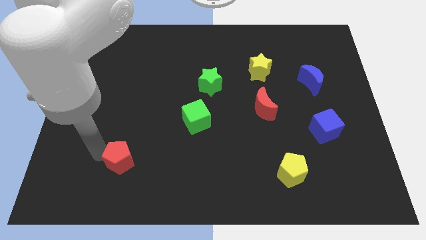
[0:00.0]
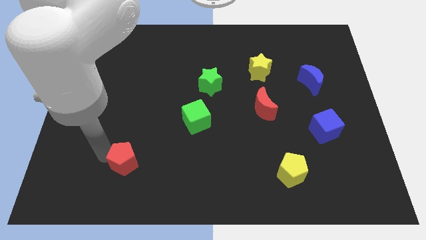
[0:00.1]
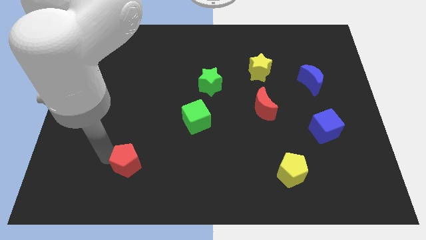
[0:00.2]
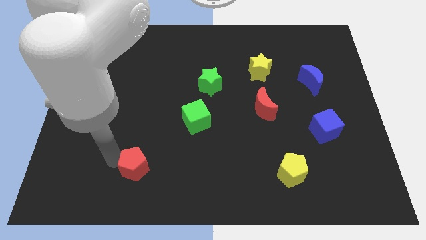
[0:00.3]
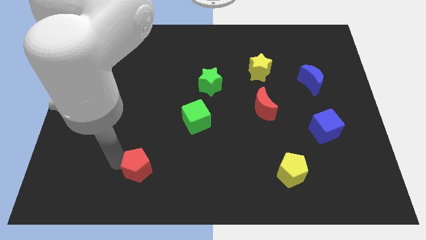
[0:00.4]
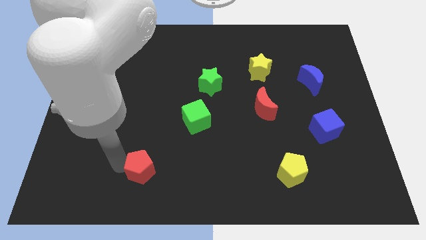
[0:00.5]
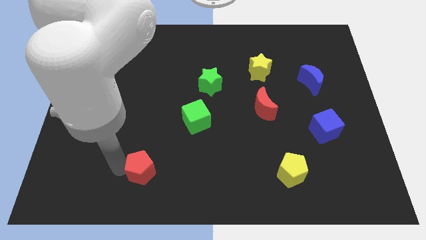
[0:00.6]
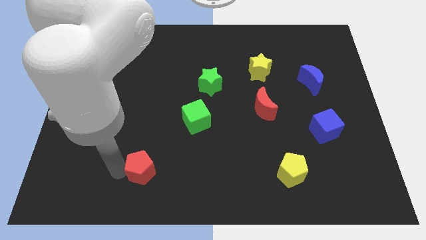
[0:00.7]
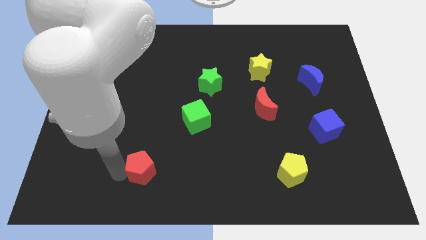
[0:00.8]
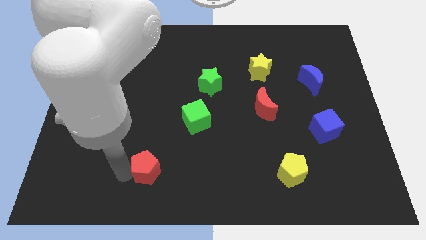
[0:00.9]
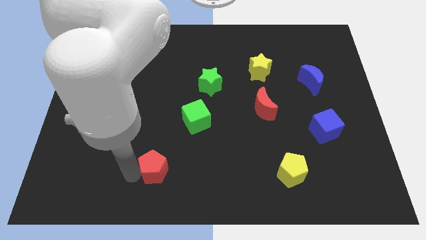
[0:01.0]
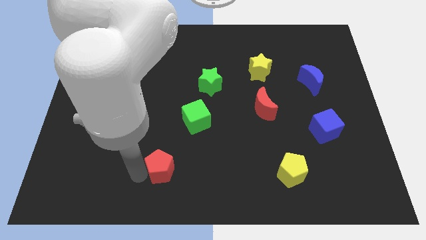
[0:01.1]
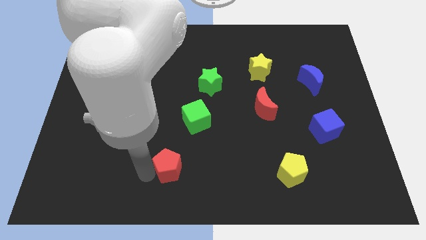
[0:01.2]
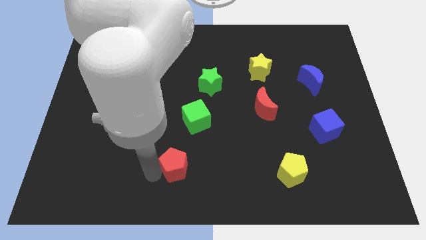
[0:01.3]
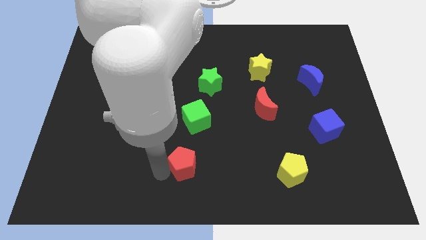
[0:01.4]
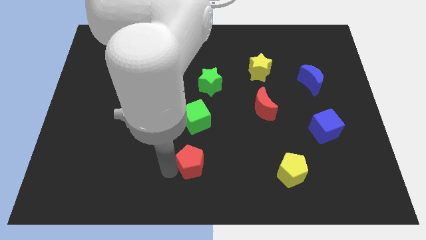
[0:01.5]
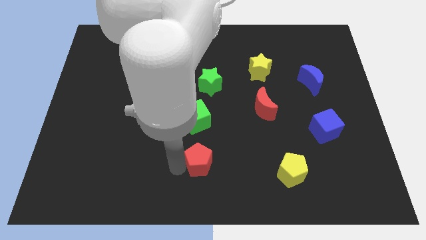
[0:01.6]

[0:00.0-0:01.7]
push the red pentagon below the green cube

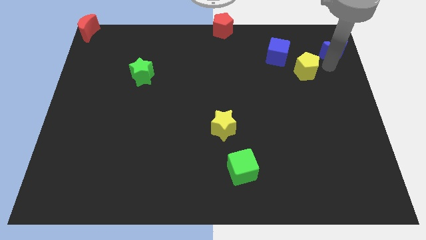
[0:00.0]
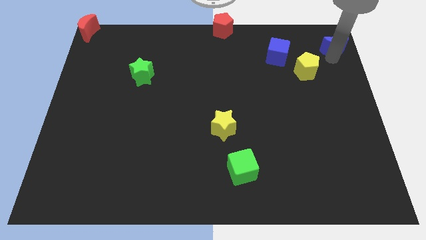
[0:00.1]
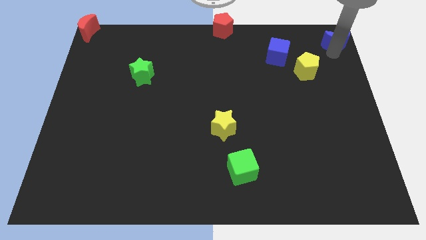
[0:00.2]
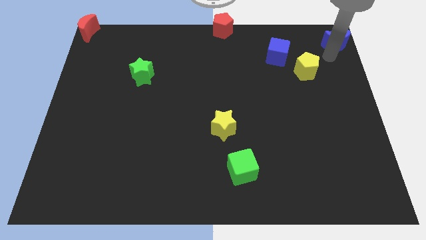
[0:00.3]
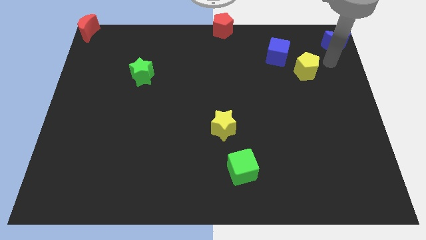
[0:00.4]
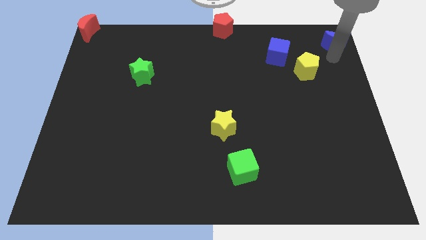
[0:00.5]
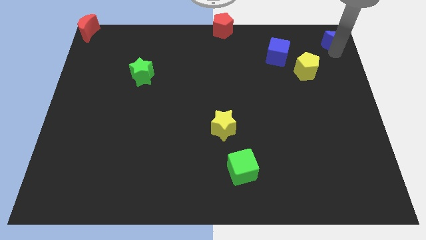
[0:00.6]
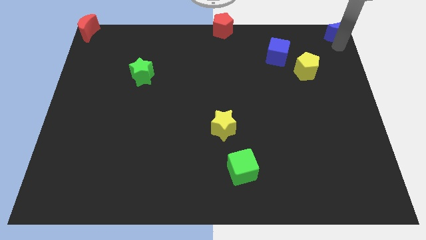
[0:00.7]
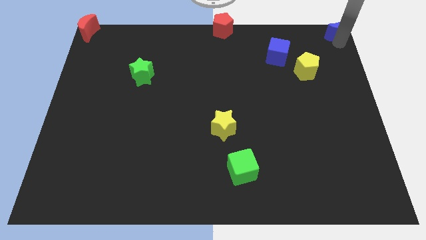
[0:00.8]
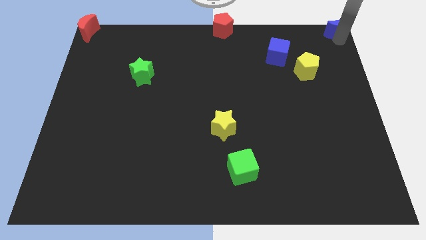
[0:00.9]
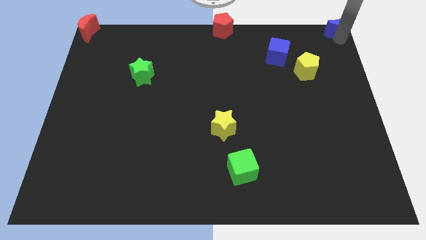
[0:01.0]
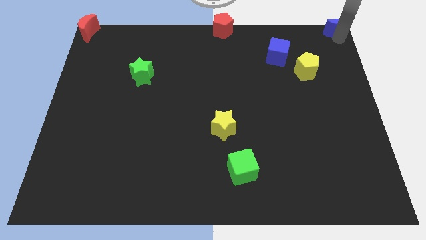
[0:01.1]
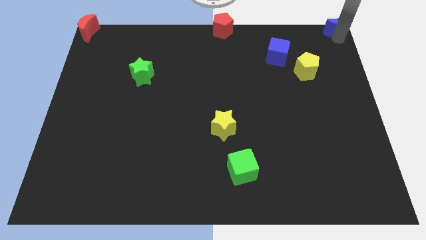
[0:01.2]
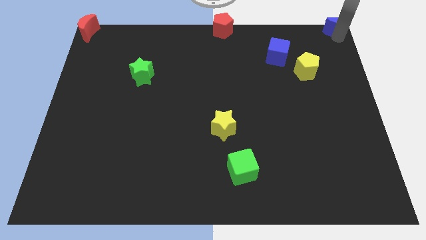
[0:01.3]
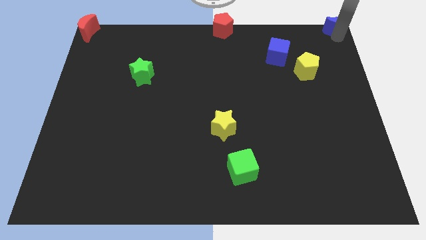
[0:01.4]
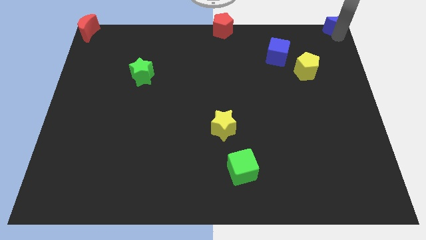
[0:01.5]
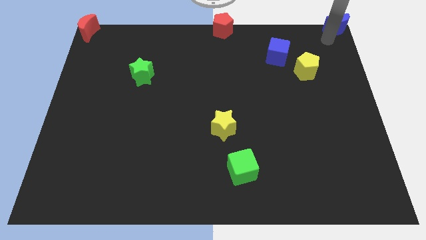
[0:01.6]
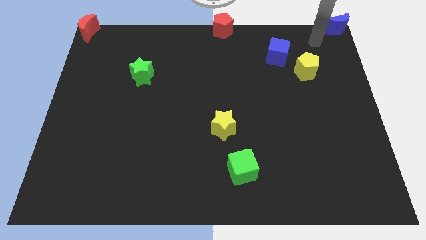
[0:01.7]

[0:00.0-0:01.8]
push the blue crescent towards the top right of the board

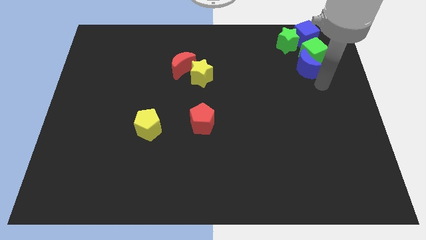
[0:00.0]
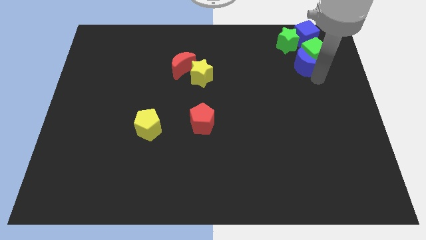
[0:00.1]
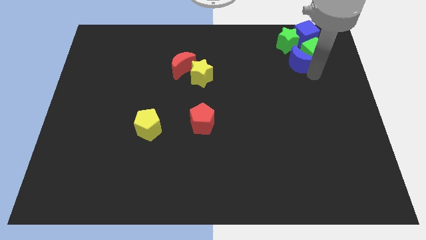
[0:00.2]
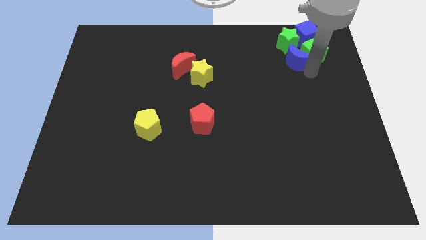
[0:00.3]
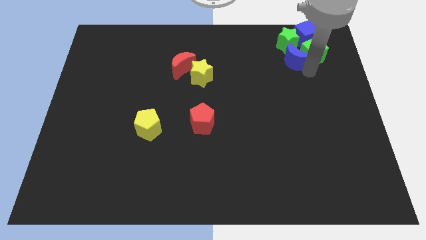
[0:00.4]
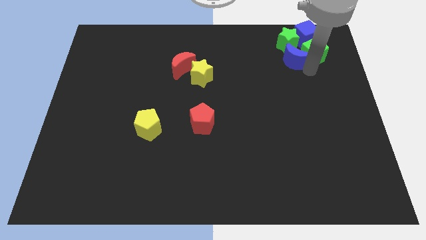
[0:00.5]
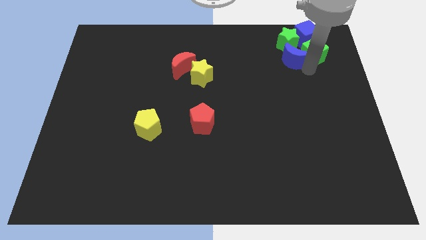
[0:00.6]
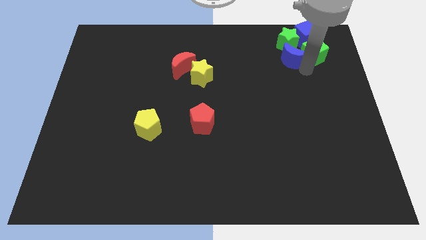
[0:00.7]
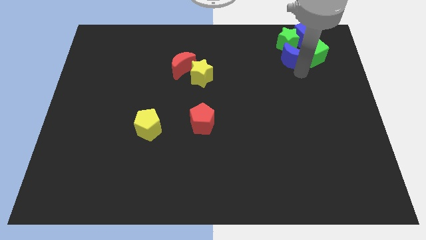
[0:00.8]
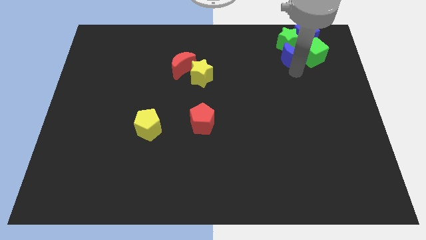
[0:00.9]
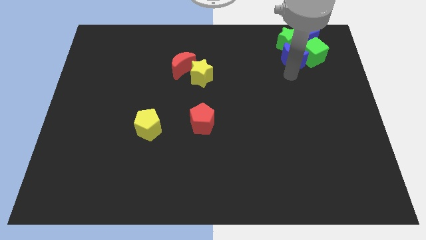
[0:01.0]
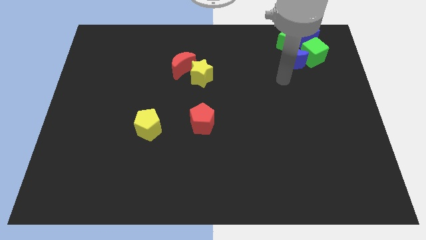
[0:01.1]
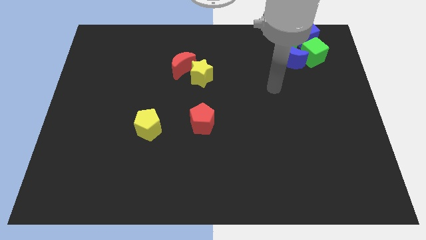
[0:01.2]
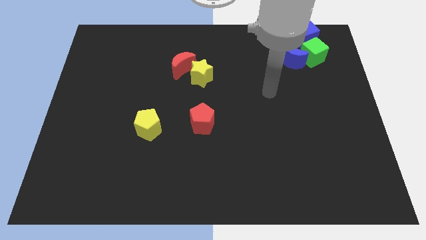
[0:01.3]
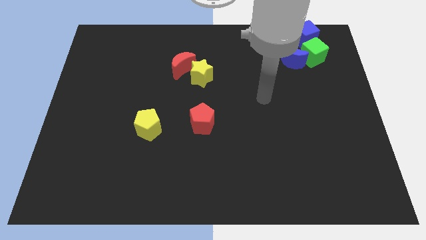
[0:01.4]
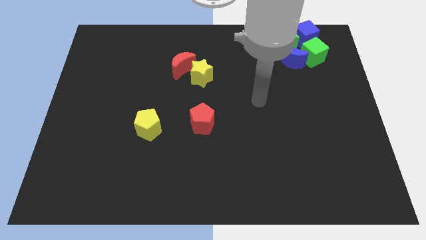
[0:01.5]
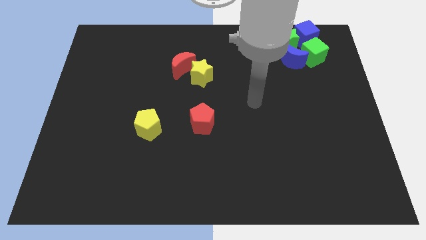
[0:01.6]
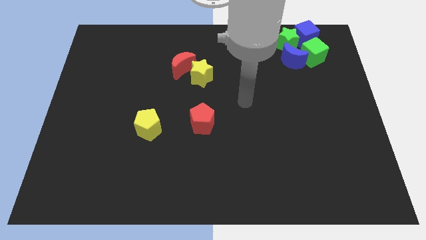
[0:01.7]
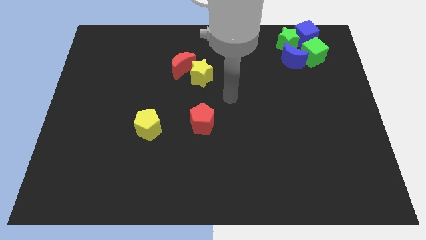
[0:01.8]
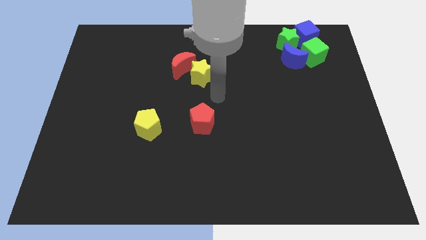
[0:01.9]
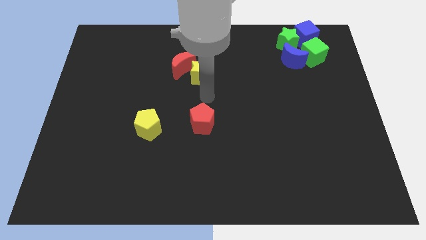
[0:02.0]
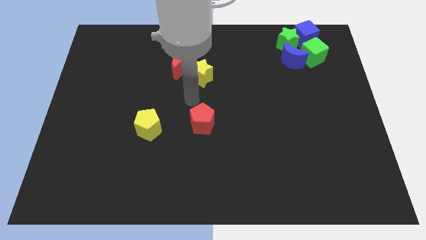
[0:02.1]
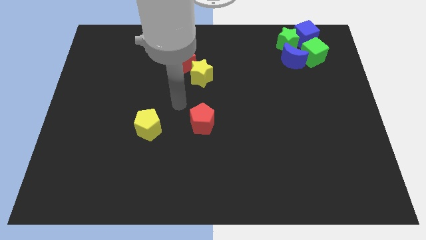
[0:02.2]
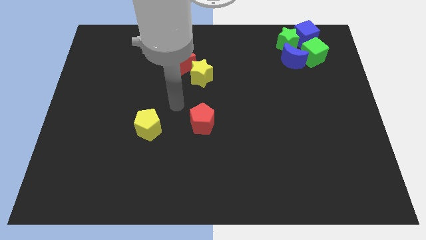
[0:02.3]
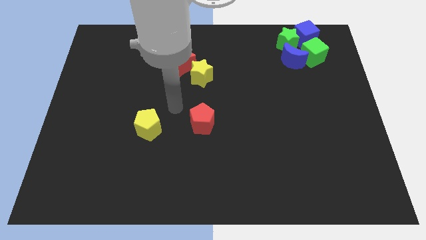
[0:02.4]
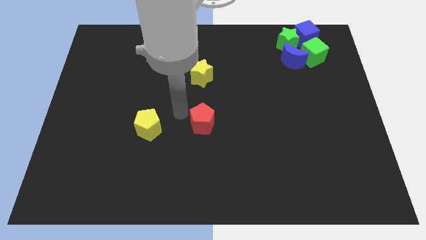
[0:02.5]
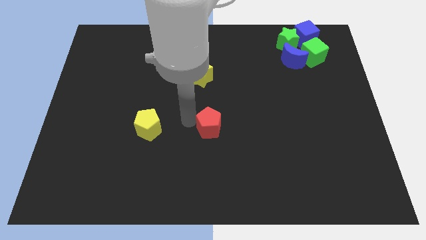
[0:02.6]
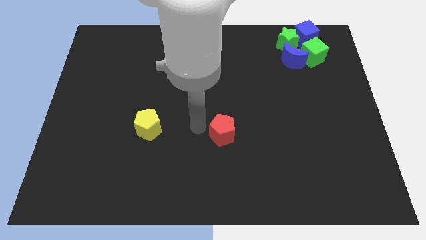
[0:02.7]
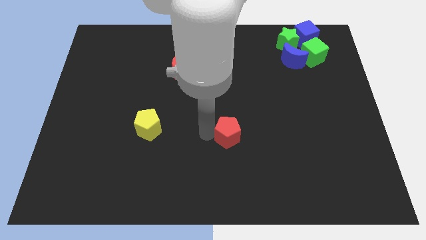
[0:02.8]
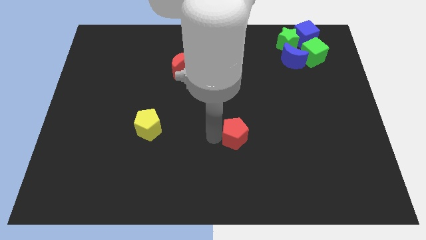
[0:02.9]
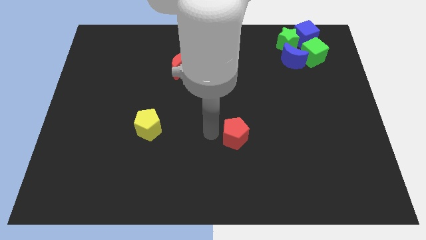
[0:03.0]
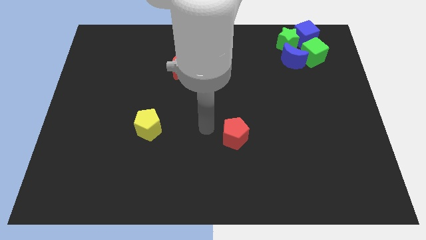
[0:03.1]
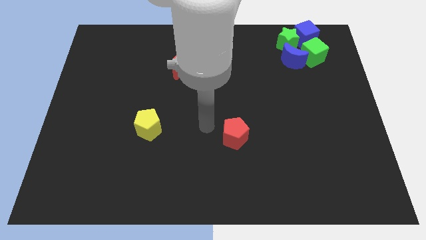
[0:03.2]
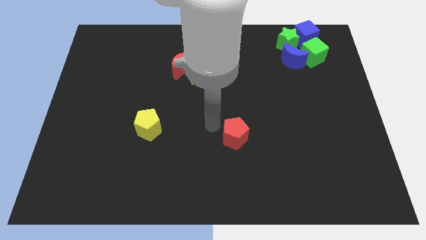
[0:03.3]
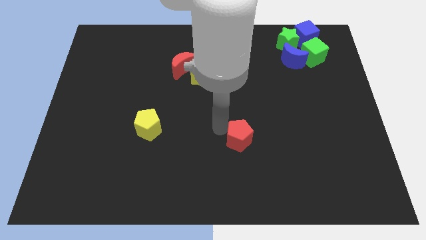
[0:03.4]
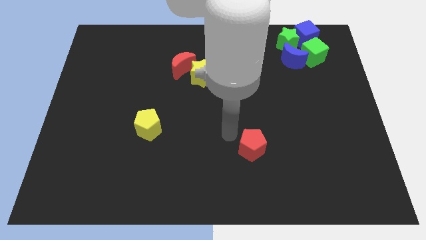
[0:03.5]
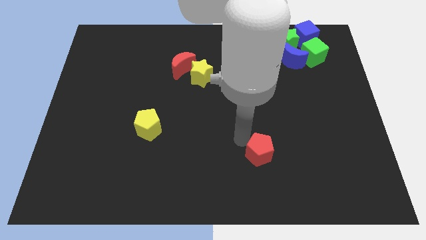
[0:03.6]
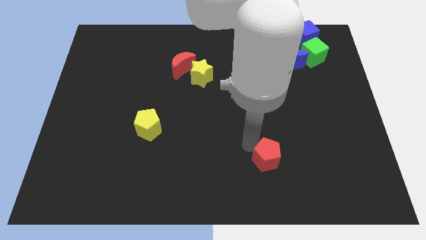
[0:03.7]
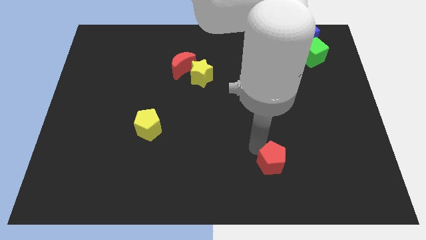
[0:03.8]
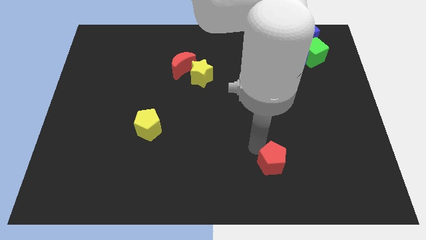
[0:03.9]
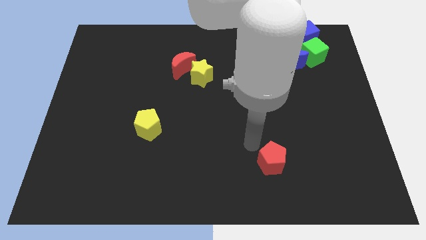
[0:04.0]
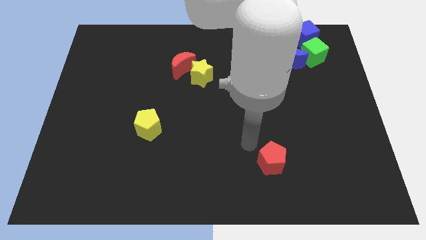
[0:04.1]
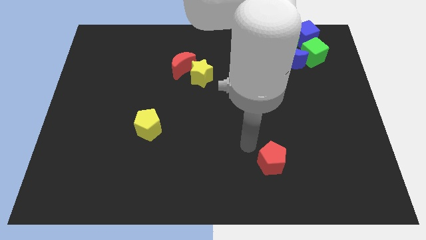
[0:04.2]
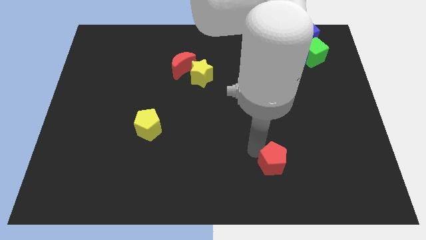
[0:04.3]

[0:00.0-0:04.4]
move the red pentagon towards the bottom of the board

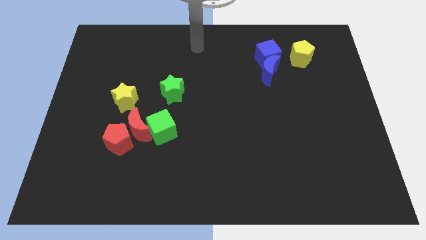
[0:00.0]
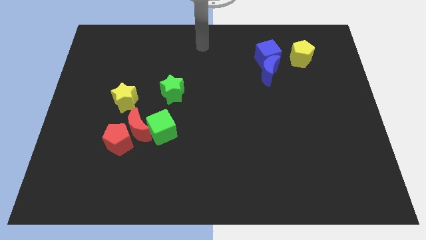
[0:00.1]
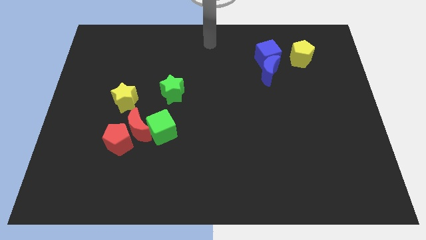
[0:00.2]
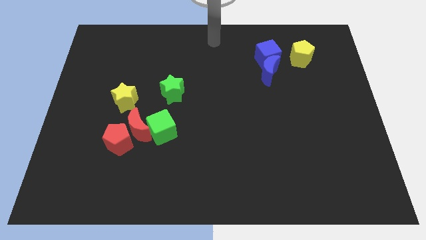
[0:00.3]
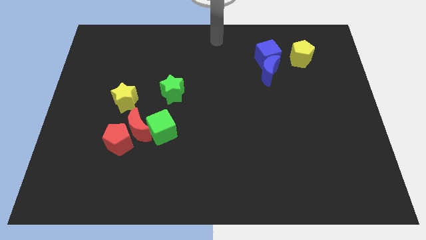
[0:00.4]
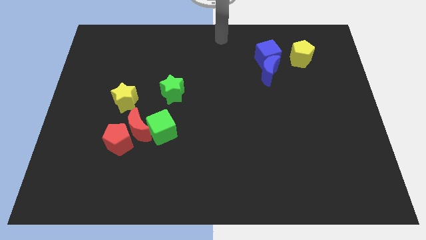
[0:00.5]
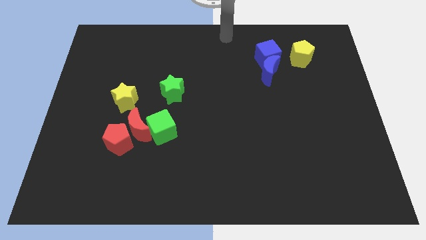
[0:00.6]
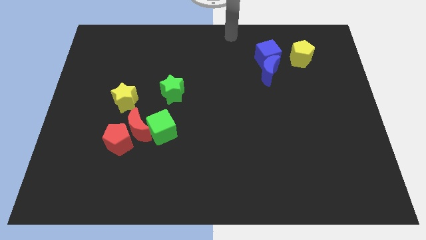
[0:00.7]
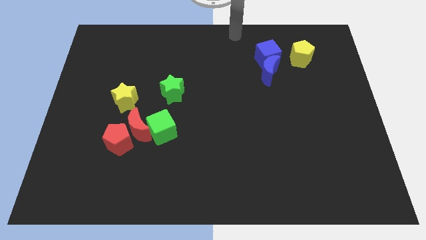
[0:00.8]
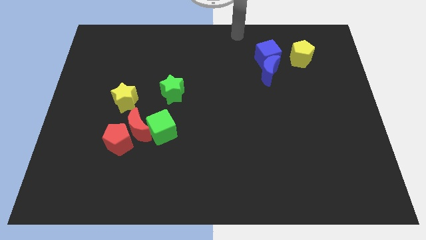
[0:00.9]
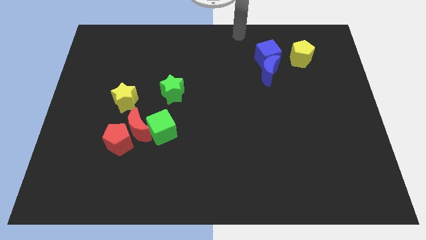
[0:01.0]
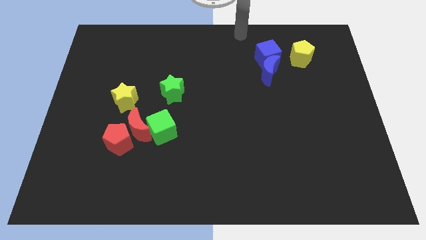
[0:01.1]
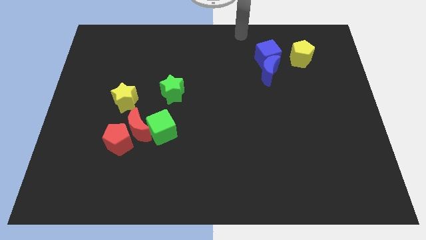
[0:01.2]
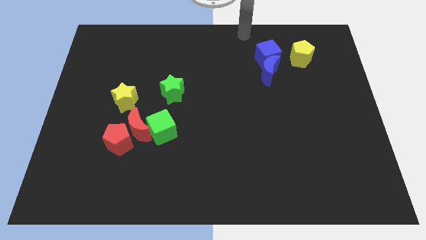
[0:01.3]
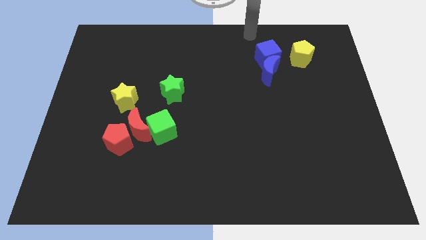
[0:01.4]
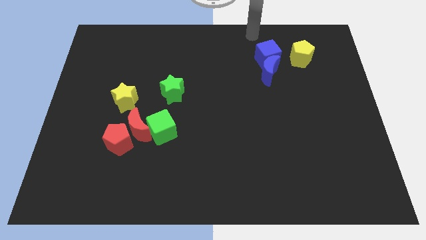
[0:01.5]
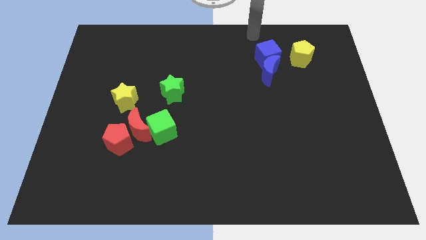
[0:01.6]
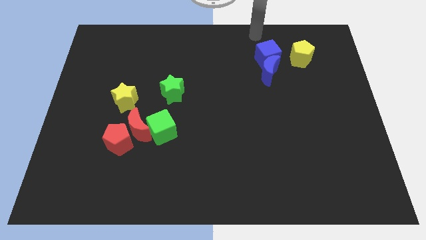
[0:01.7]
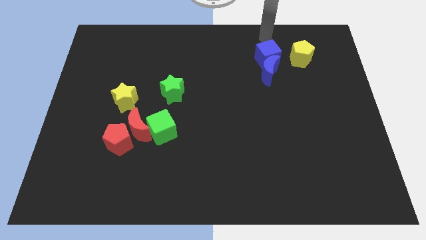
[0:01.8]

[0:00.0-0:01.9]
move the pointer to the top of the blue cube
